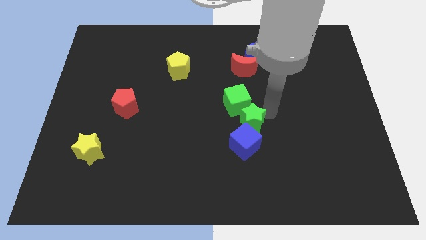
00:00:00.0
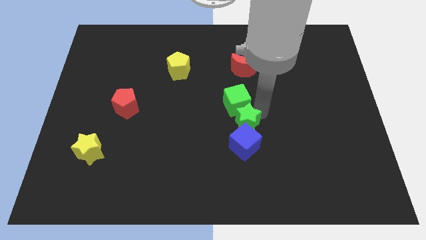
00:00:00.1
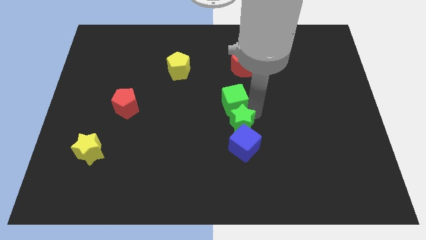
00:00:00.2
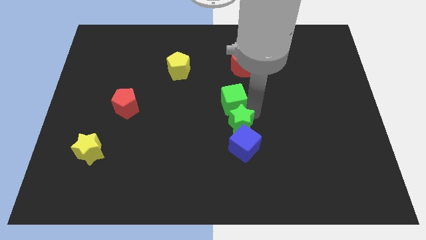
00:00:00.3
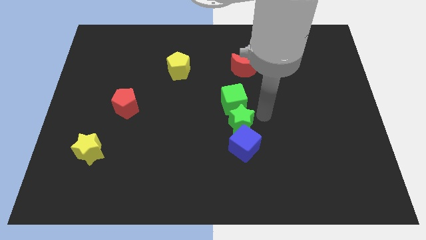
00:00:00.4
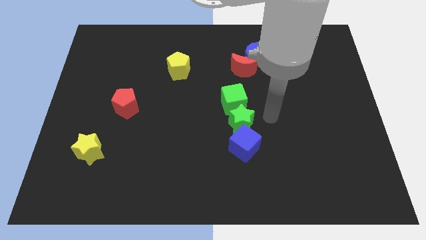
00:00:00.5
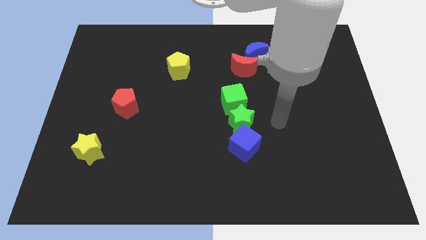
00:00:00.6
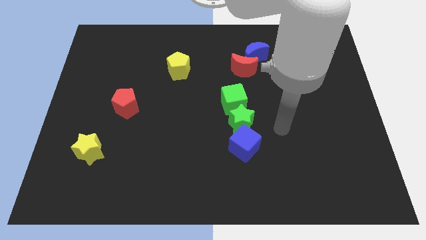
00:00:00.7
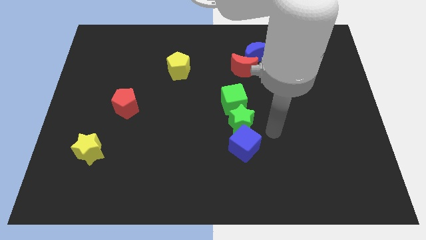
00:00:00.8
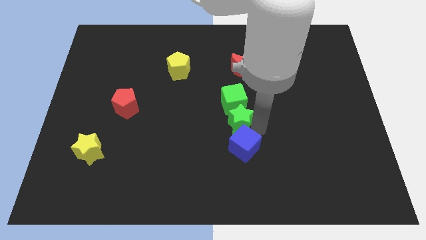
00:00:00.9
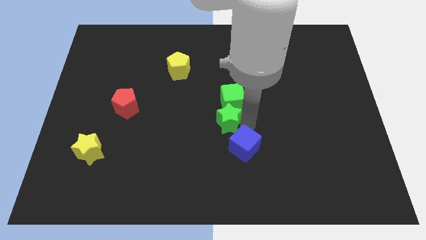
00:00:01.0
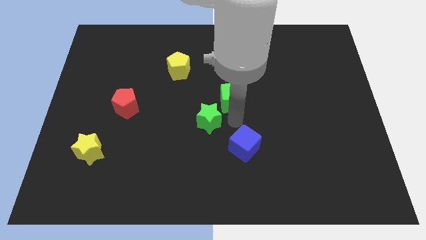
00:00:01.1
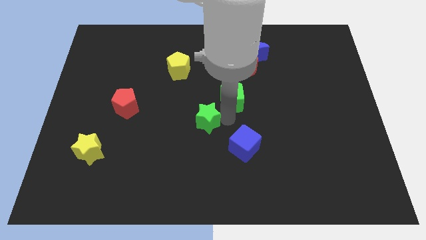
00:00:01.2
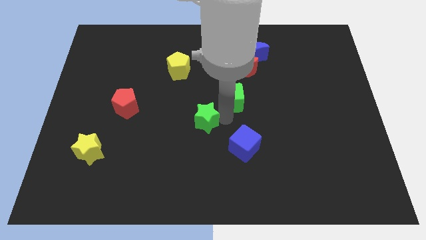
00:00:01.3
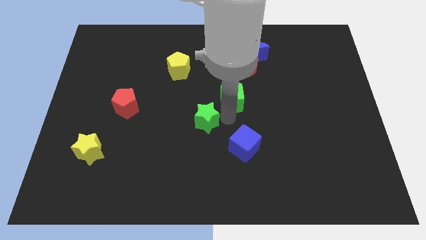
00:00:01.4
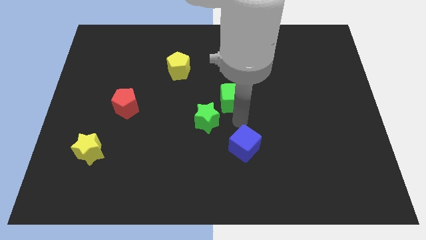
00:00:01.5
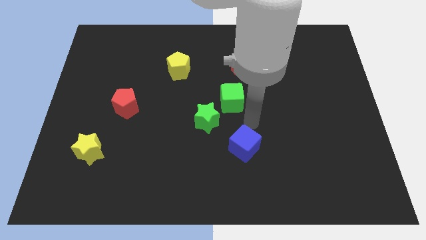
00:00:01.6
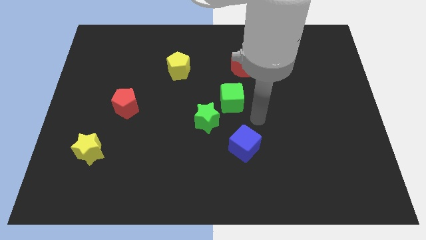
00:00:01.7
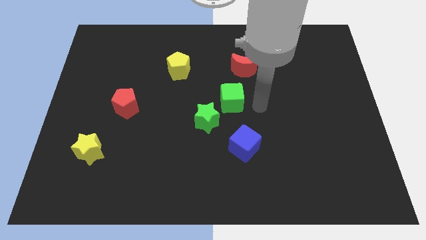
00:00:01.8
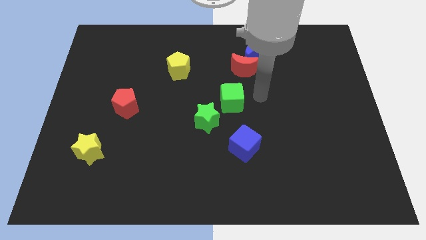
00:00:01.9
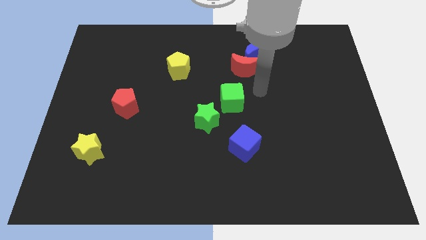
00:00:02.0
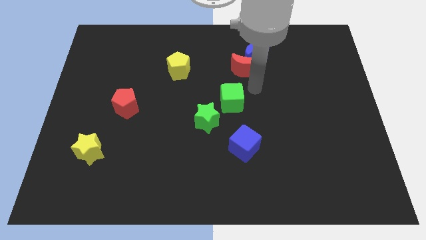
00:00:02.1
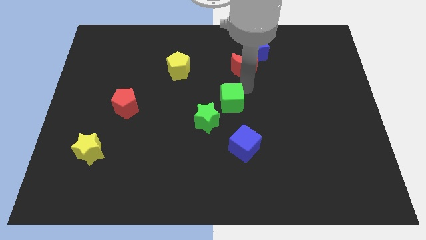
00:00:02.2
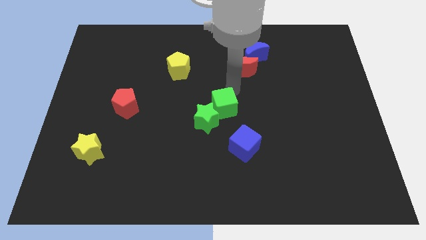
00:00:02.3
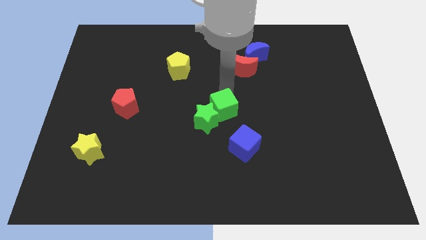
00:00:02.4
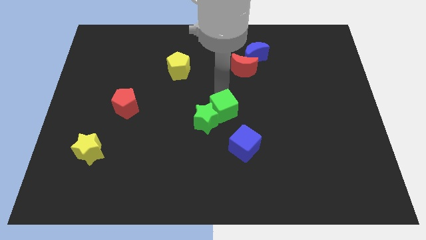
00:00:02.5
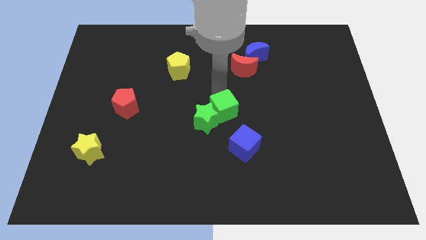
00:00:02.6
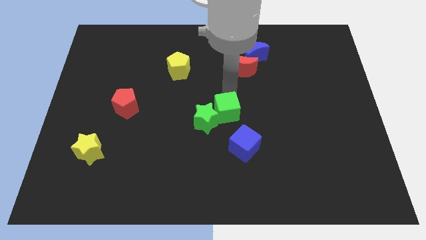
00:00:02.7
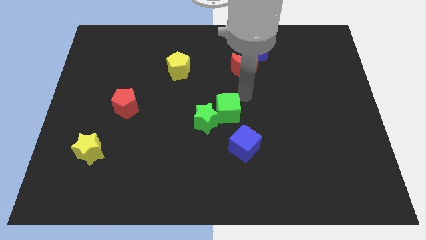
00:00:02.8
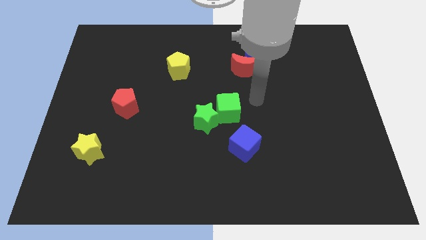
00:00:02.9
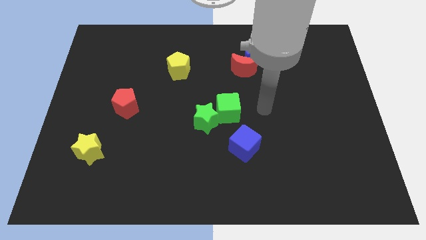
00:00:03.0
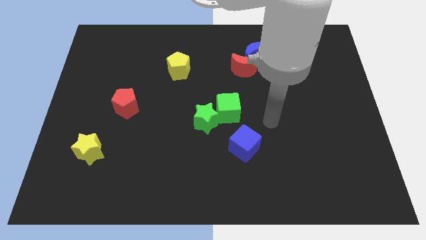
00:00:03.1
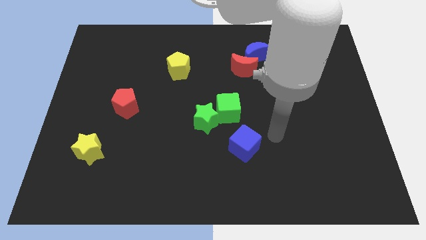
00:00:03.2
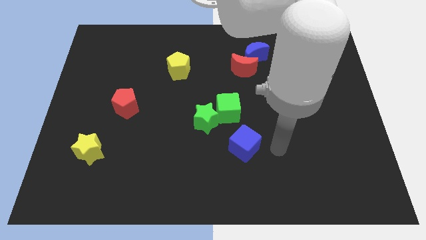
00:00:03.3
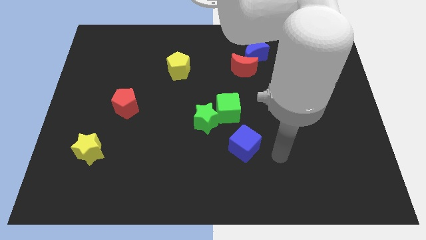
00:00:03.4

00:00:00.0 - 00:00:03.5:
separate the green blocks from the blue cube

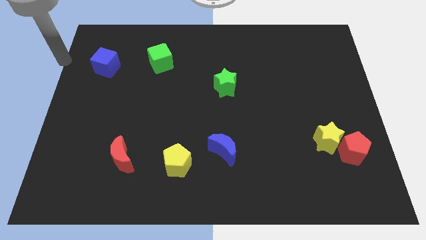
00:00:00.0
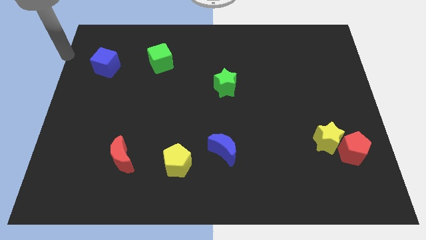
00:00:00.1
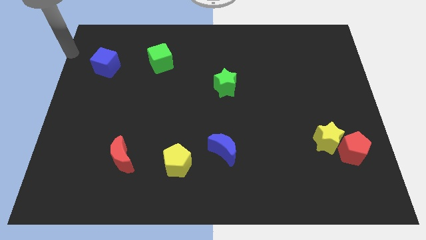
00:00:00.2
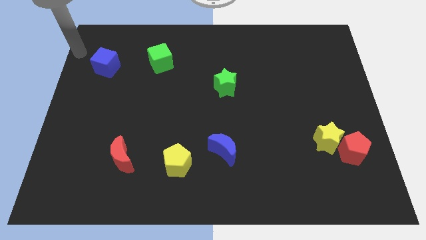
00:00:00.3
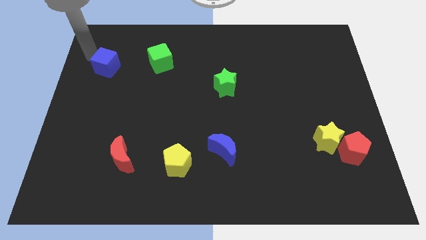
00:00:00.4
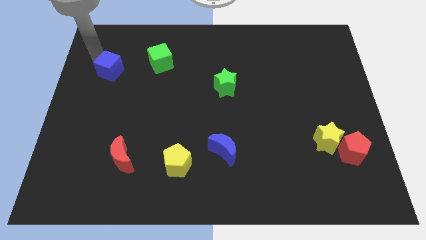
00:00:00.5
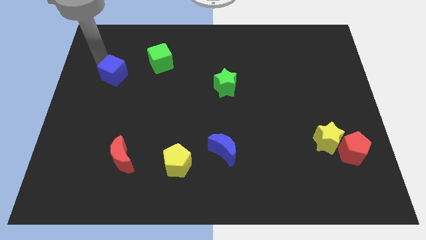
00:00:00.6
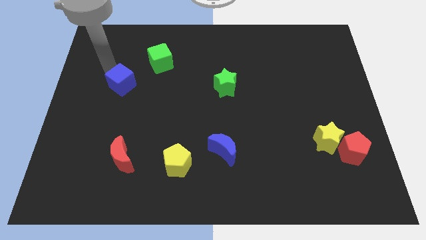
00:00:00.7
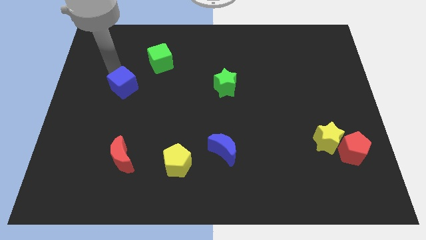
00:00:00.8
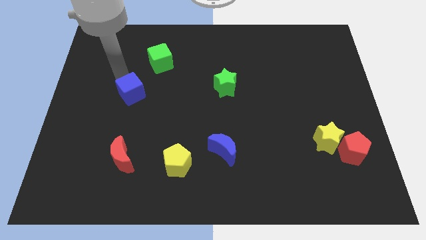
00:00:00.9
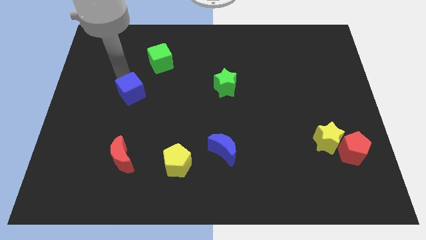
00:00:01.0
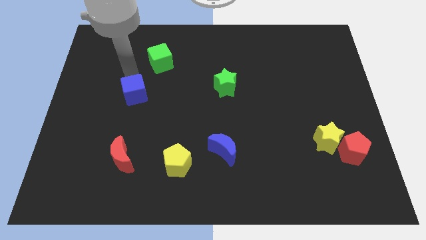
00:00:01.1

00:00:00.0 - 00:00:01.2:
move the blue cube to the bottom left of the green cube

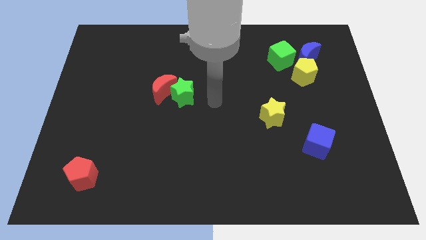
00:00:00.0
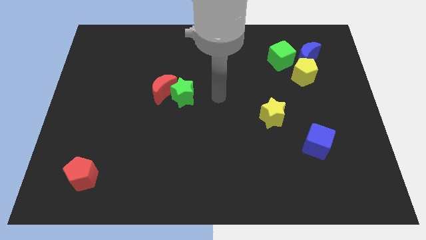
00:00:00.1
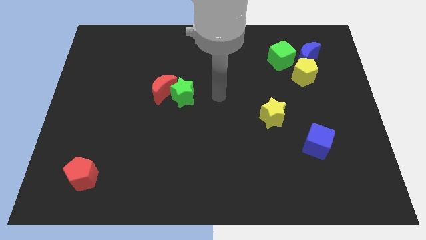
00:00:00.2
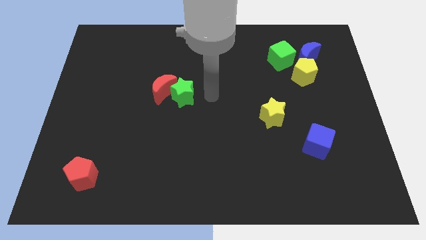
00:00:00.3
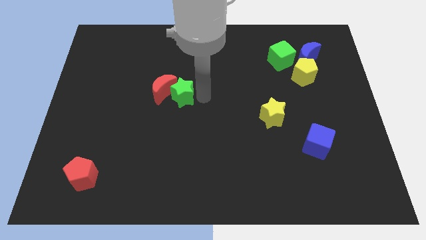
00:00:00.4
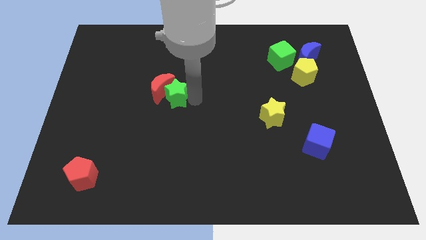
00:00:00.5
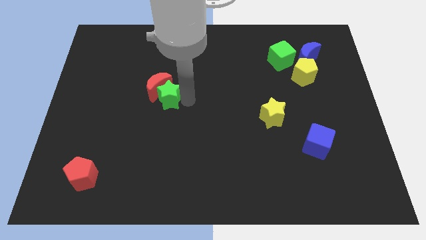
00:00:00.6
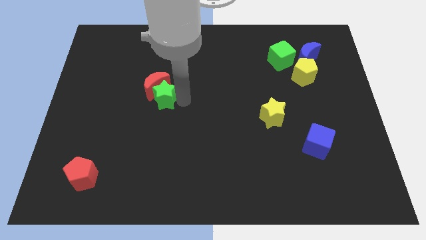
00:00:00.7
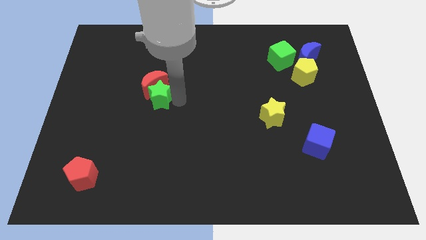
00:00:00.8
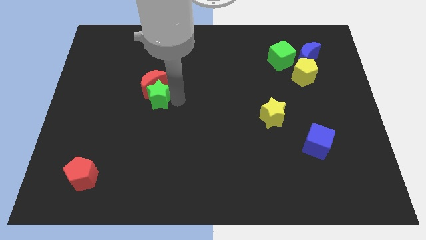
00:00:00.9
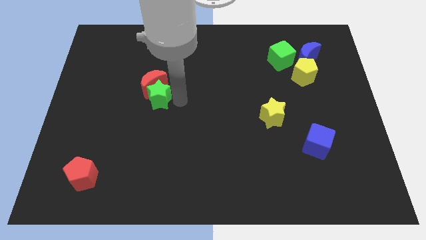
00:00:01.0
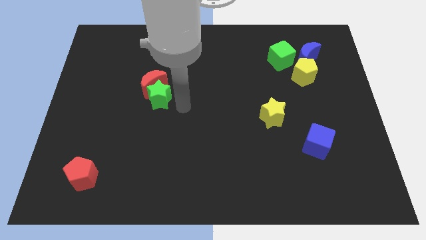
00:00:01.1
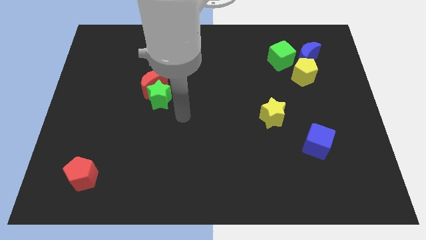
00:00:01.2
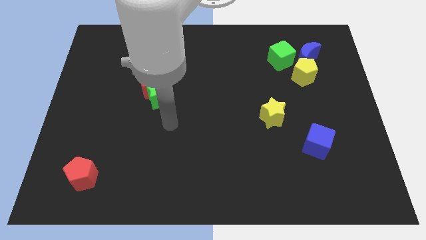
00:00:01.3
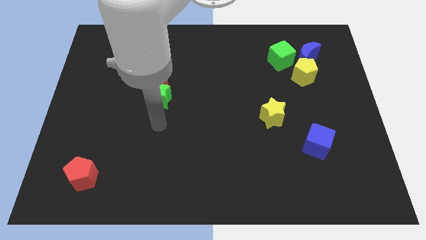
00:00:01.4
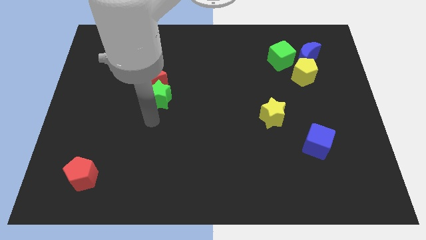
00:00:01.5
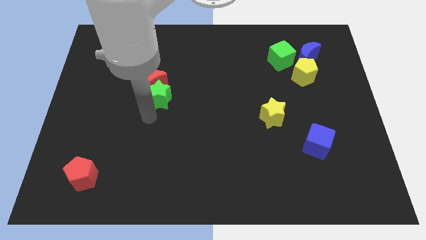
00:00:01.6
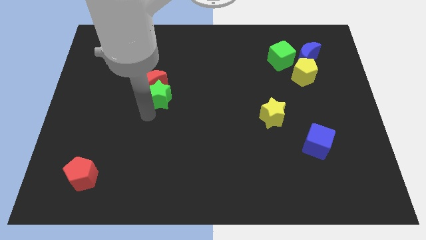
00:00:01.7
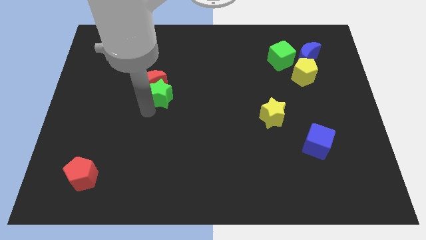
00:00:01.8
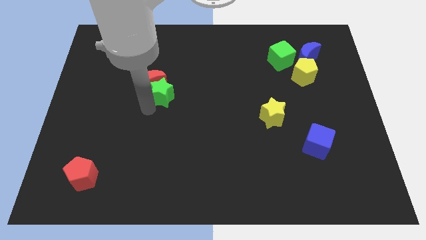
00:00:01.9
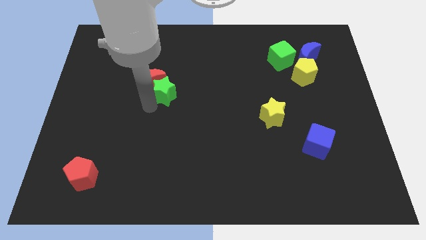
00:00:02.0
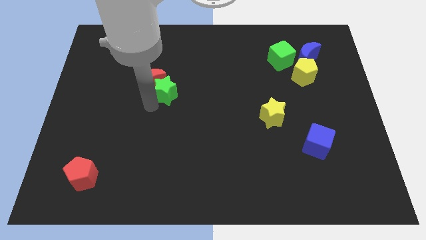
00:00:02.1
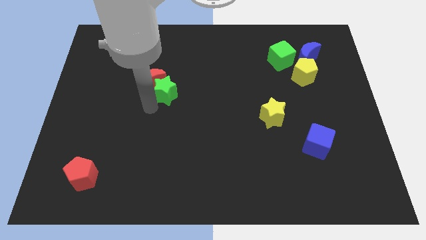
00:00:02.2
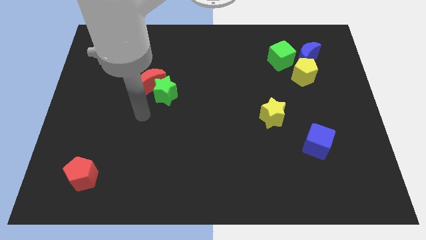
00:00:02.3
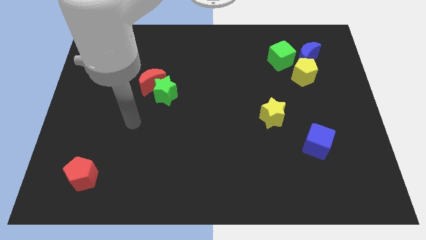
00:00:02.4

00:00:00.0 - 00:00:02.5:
push the green star to the center of the board

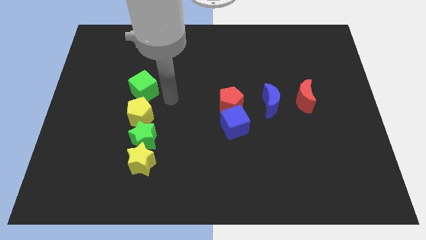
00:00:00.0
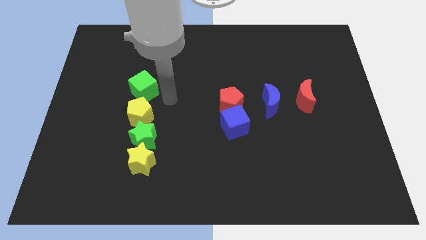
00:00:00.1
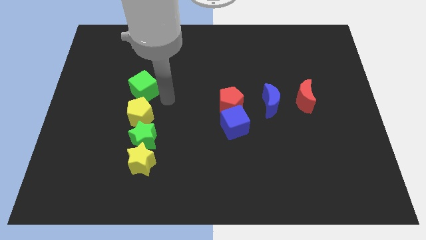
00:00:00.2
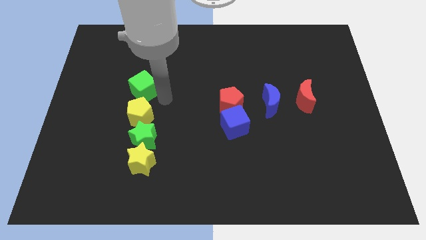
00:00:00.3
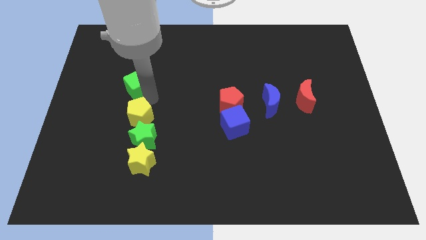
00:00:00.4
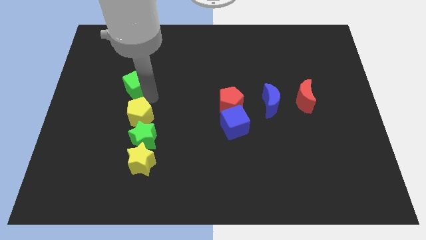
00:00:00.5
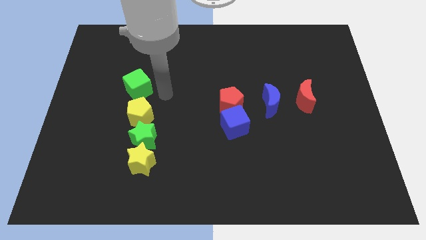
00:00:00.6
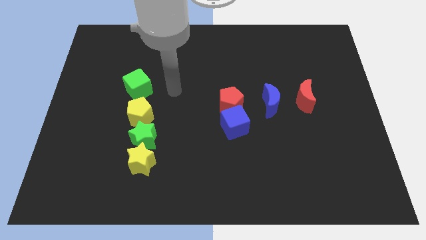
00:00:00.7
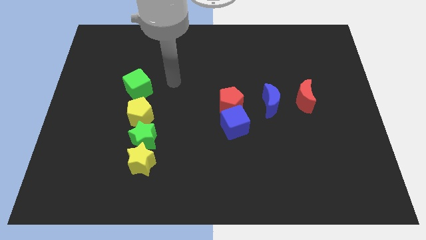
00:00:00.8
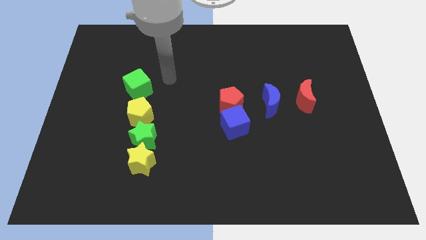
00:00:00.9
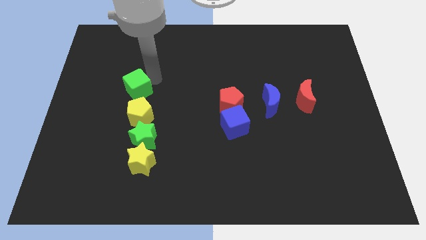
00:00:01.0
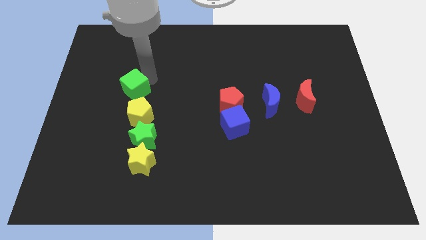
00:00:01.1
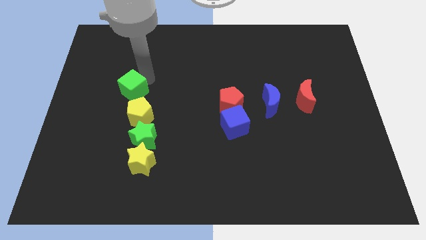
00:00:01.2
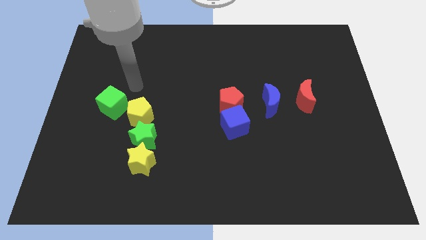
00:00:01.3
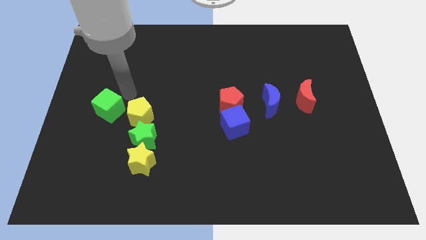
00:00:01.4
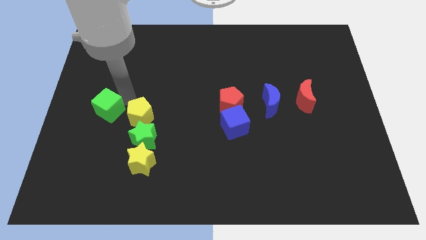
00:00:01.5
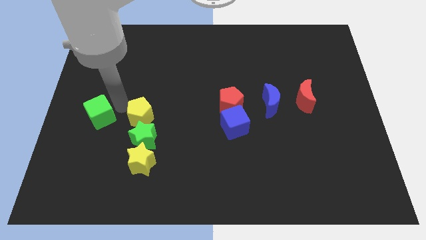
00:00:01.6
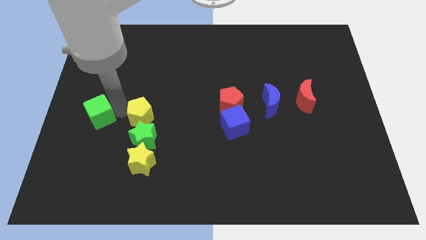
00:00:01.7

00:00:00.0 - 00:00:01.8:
drag the green cube parallel left to the yellow pentagon
